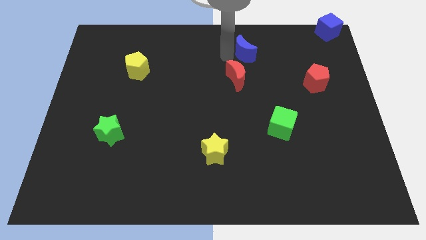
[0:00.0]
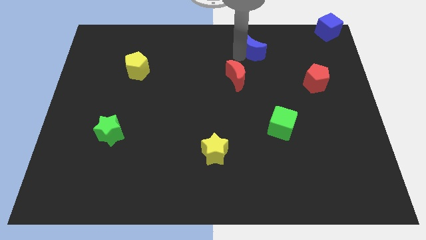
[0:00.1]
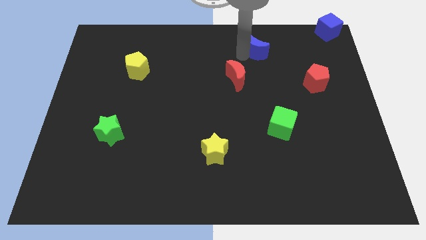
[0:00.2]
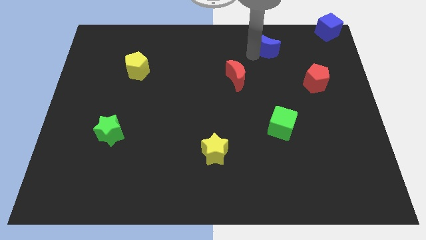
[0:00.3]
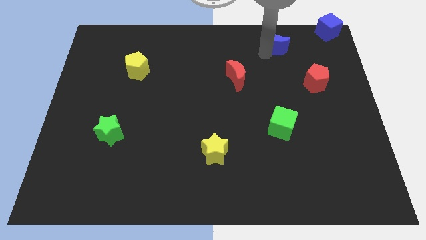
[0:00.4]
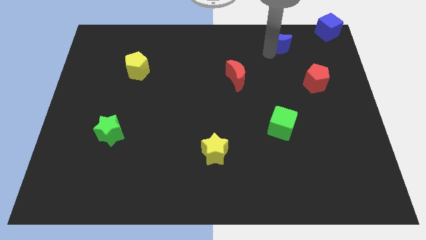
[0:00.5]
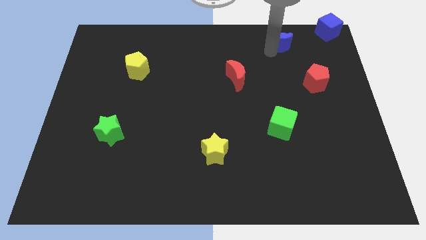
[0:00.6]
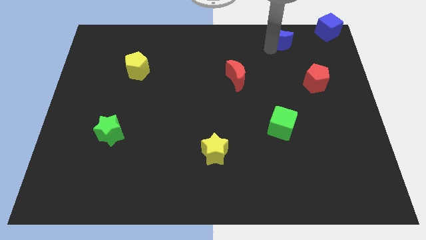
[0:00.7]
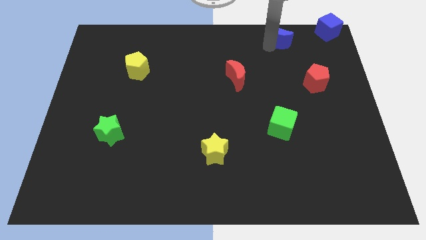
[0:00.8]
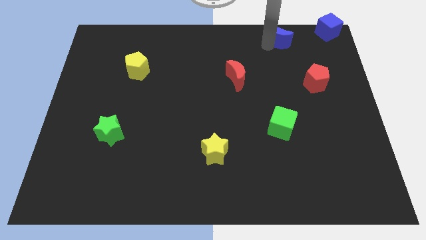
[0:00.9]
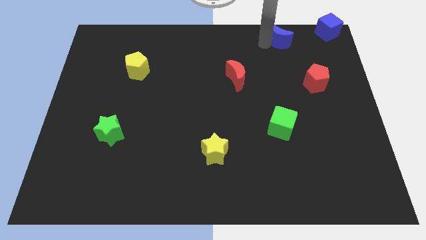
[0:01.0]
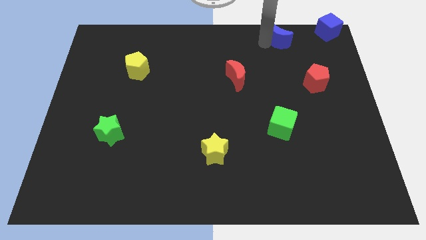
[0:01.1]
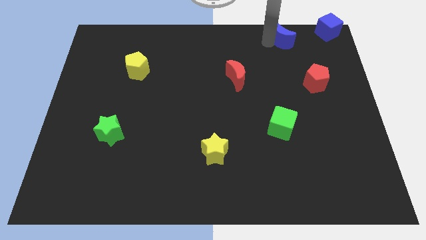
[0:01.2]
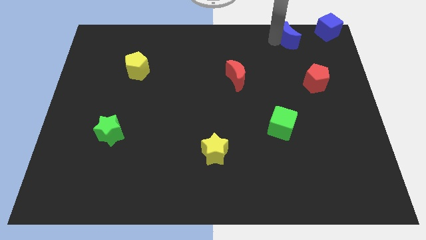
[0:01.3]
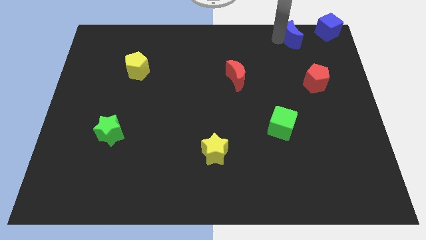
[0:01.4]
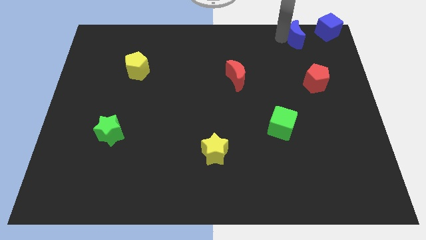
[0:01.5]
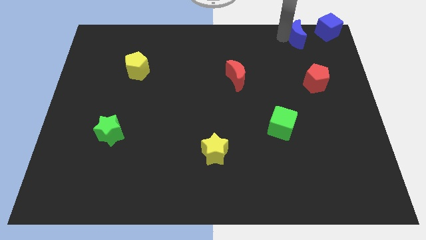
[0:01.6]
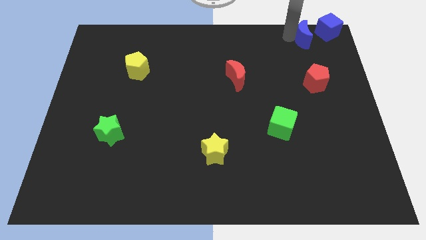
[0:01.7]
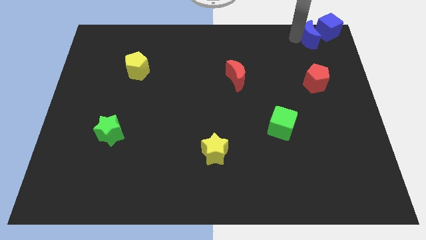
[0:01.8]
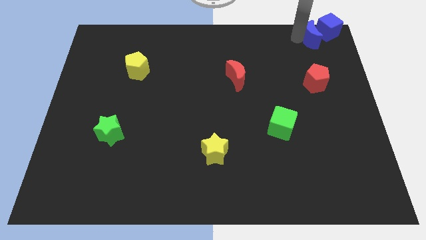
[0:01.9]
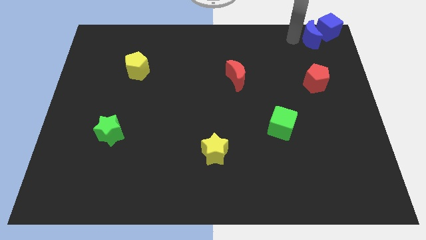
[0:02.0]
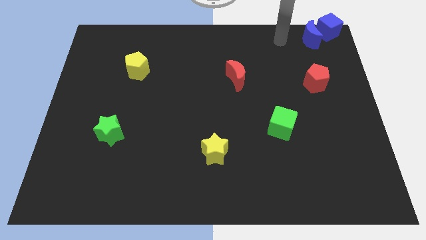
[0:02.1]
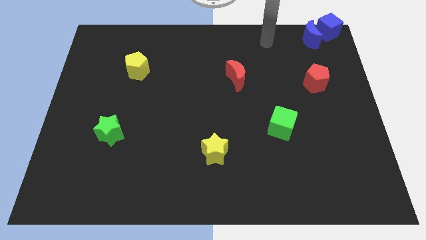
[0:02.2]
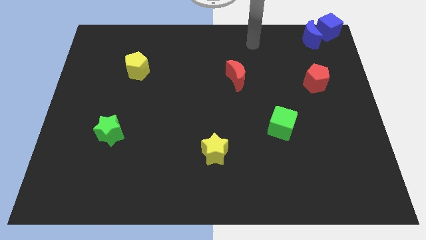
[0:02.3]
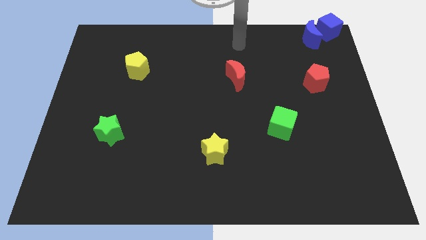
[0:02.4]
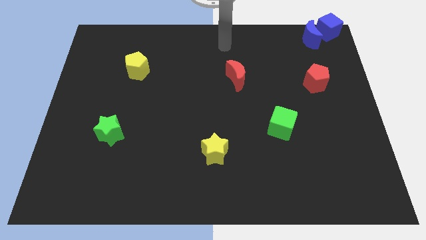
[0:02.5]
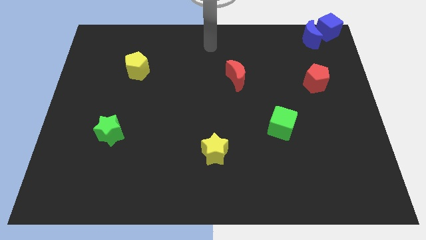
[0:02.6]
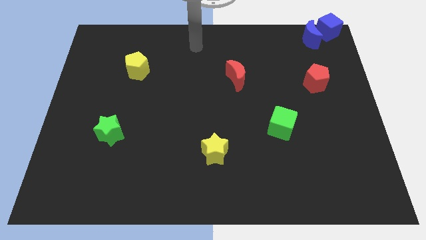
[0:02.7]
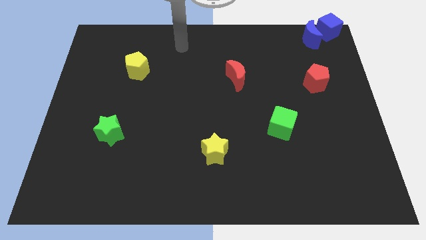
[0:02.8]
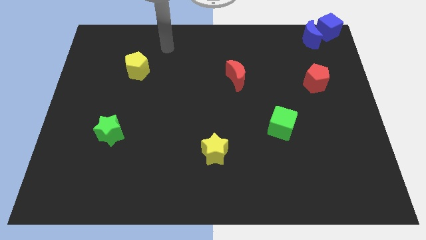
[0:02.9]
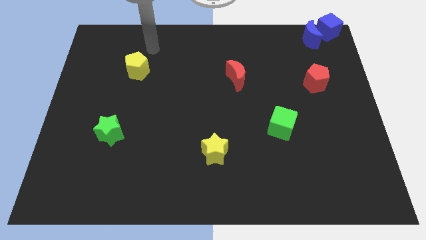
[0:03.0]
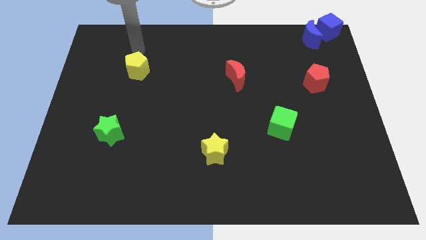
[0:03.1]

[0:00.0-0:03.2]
slide the blue crescent vertically to the top side of the red pentagon

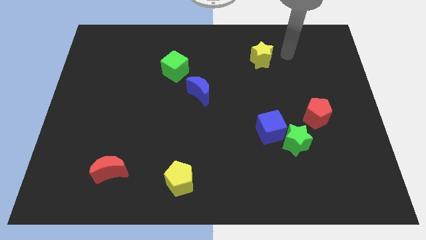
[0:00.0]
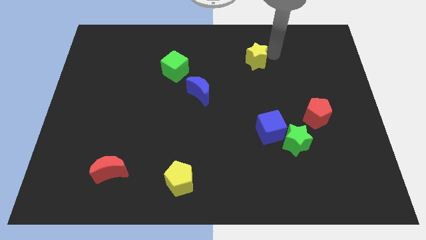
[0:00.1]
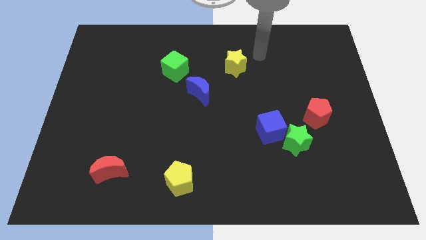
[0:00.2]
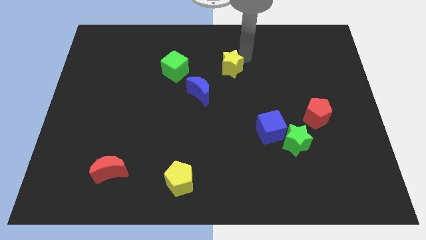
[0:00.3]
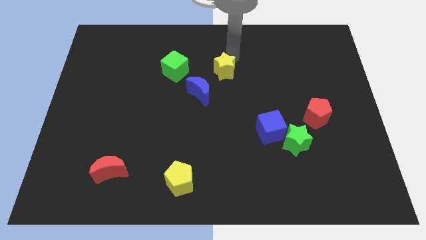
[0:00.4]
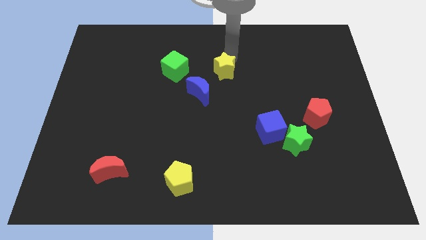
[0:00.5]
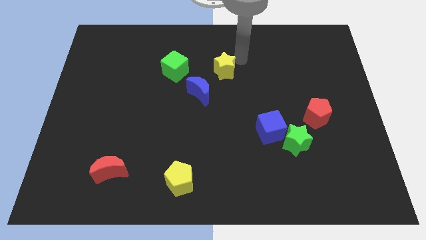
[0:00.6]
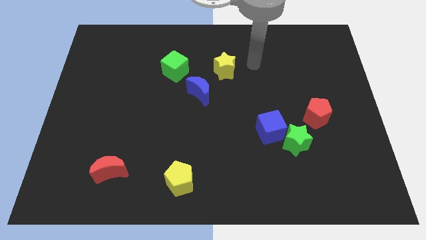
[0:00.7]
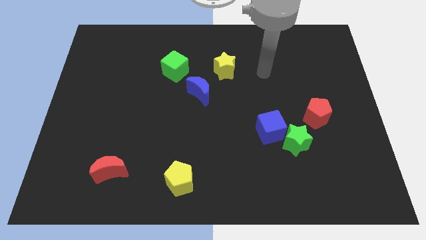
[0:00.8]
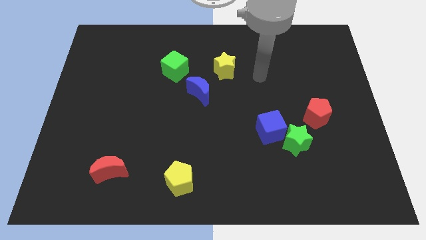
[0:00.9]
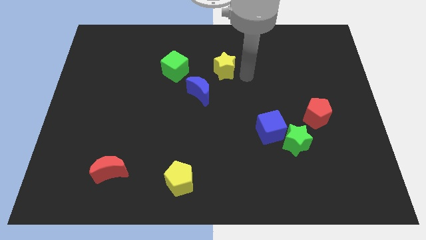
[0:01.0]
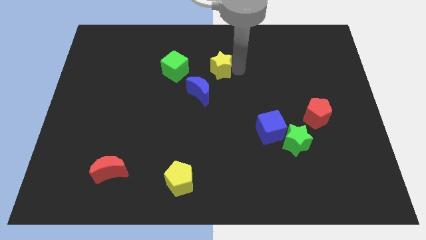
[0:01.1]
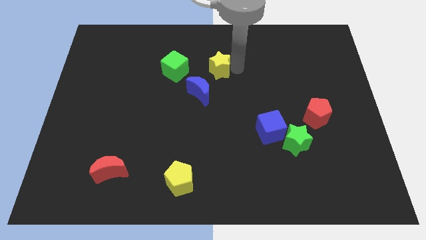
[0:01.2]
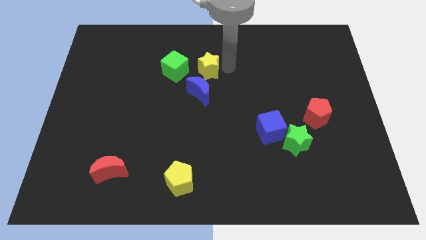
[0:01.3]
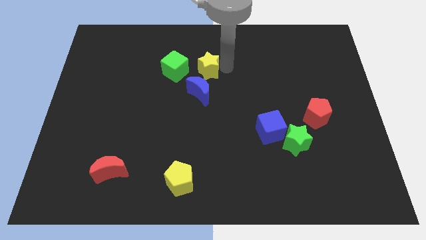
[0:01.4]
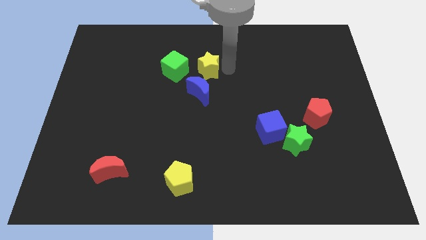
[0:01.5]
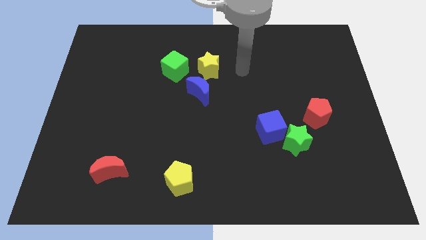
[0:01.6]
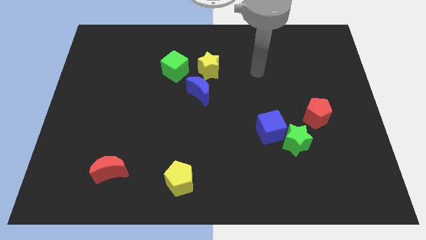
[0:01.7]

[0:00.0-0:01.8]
place the yellow star above the blue crescent

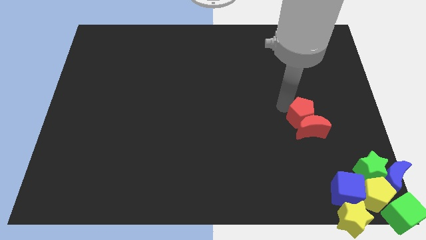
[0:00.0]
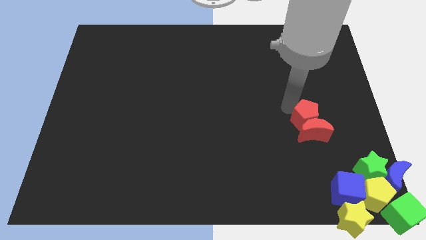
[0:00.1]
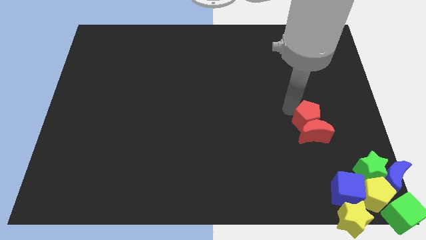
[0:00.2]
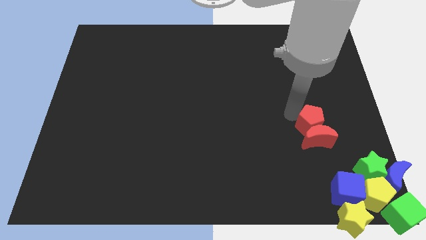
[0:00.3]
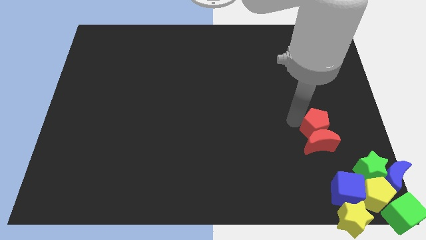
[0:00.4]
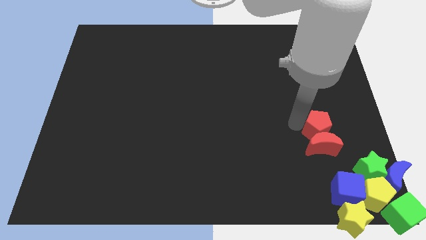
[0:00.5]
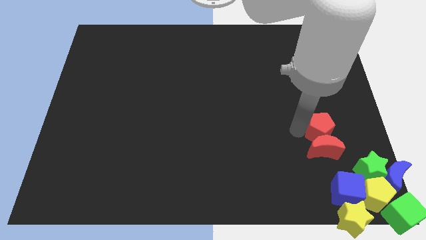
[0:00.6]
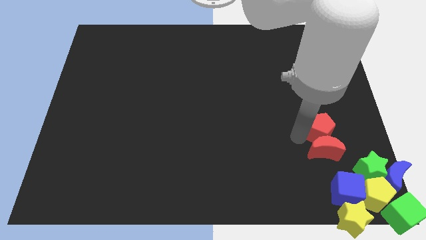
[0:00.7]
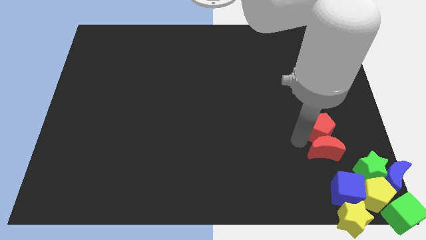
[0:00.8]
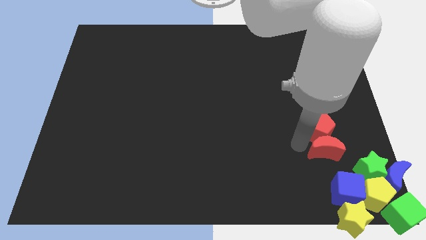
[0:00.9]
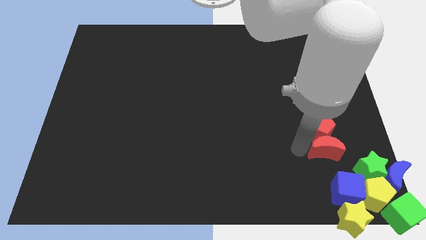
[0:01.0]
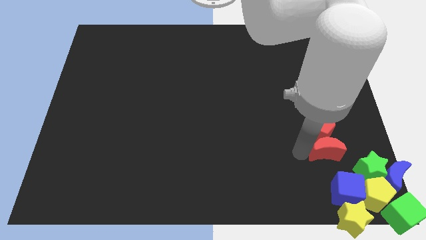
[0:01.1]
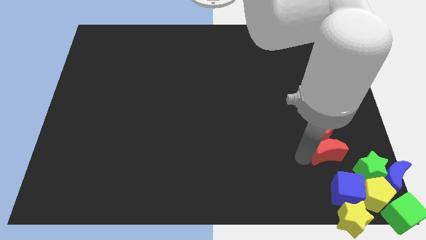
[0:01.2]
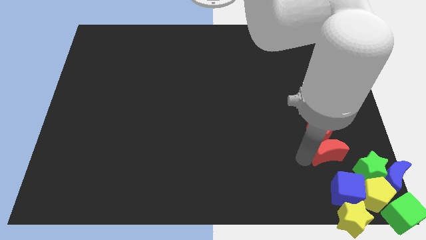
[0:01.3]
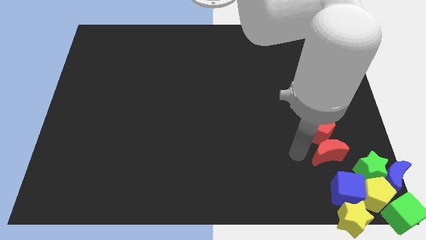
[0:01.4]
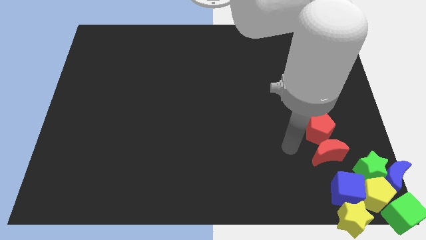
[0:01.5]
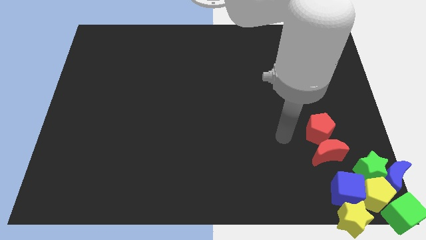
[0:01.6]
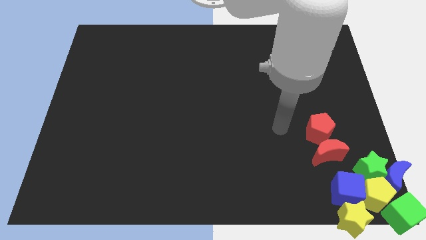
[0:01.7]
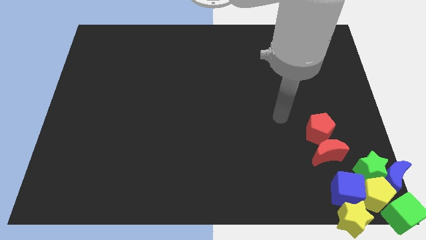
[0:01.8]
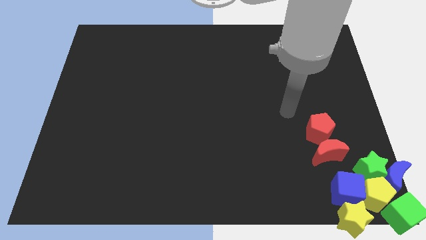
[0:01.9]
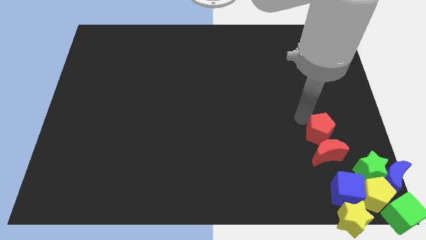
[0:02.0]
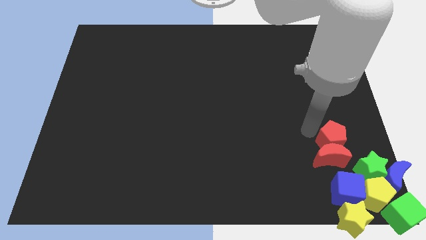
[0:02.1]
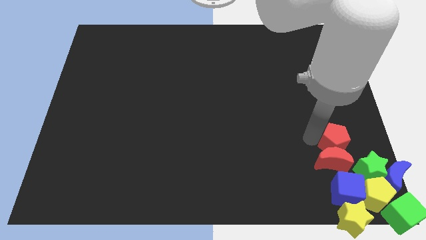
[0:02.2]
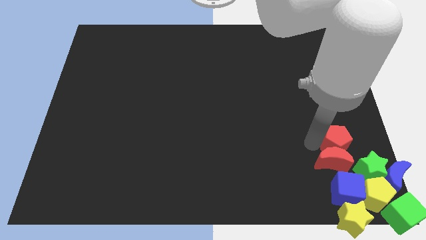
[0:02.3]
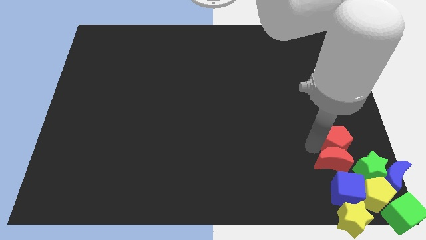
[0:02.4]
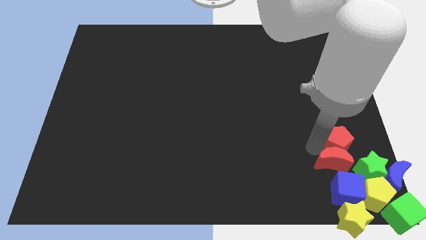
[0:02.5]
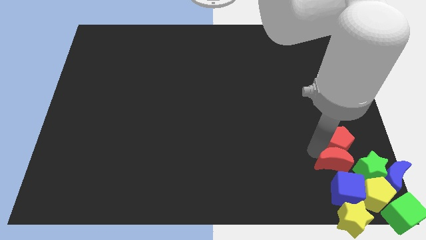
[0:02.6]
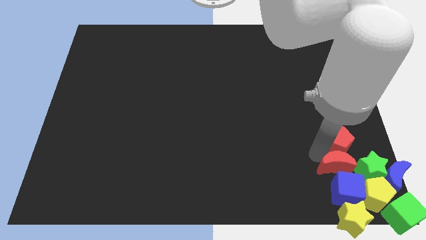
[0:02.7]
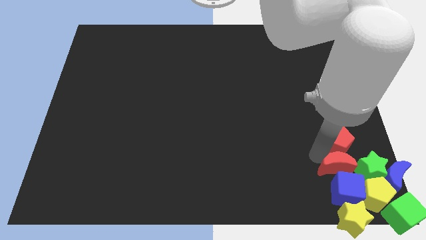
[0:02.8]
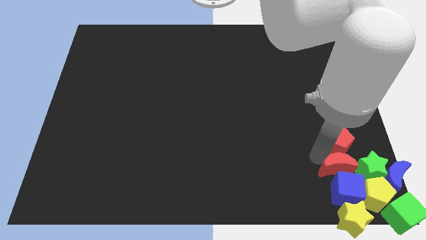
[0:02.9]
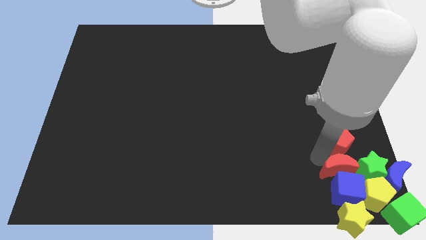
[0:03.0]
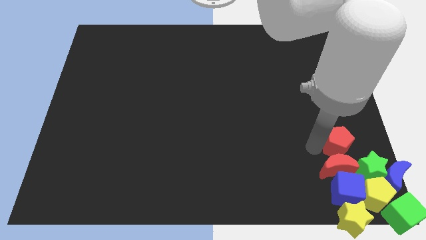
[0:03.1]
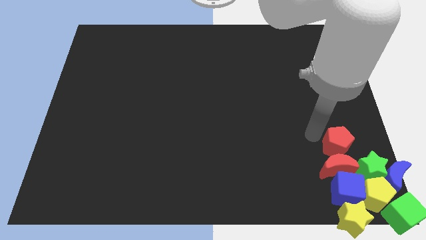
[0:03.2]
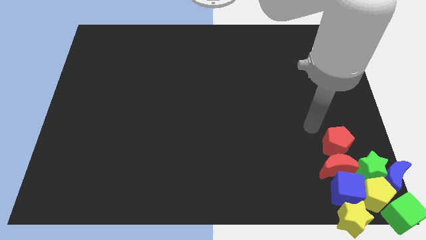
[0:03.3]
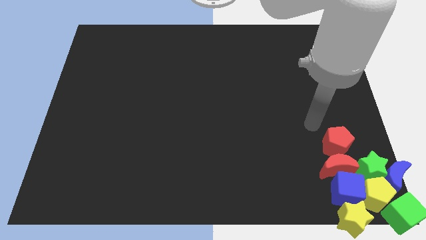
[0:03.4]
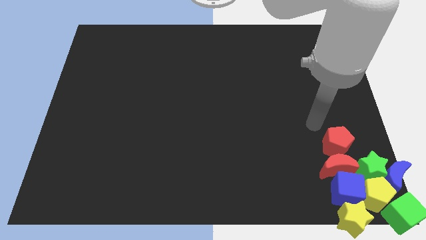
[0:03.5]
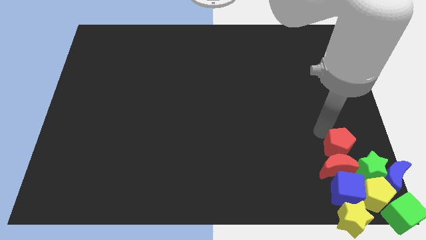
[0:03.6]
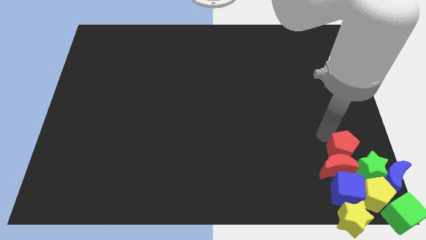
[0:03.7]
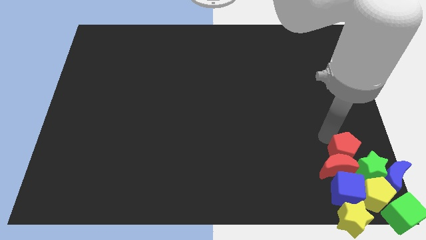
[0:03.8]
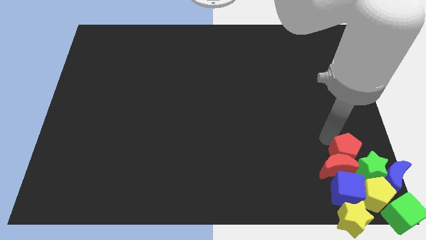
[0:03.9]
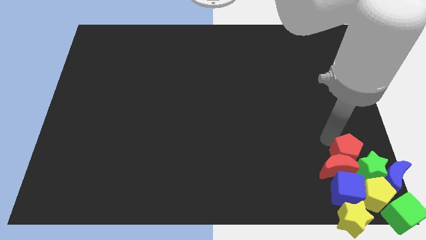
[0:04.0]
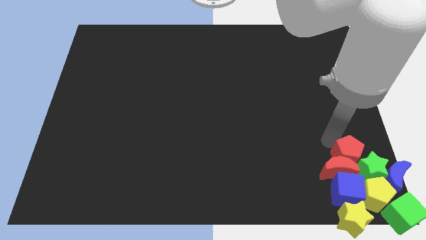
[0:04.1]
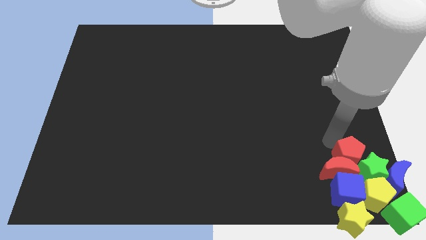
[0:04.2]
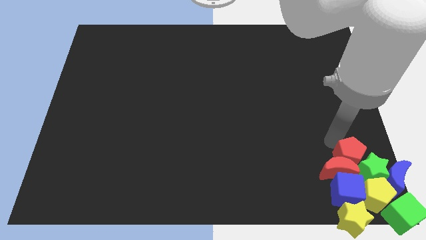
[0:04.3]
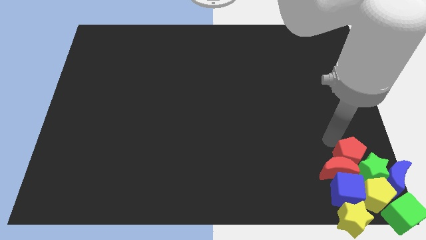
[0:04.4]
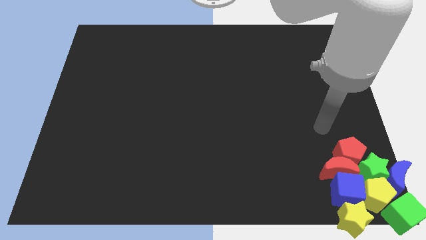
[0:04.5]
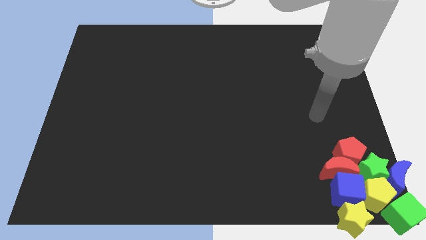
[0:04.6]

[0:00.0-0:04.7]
move red blocks to the group of blocks
